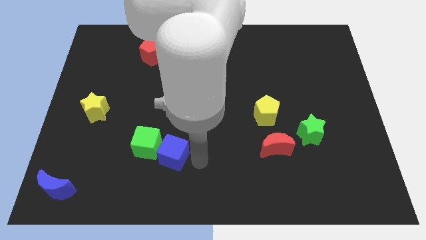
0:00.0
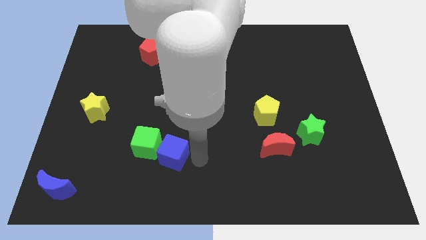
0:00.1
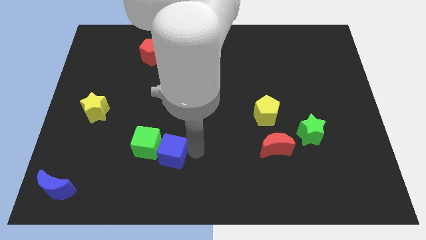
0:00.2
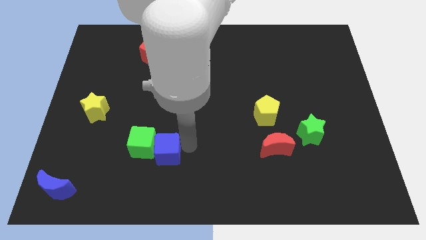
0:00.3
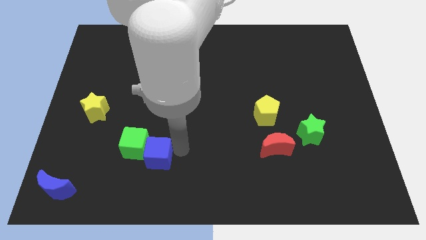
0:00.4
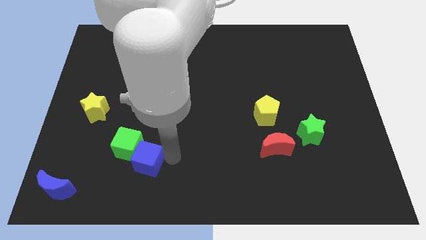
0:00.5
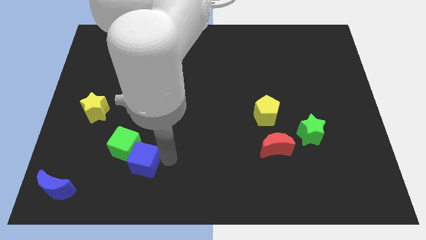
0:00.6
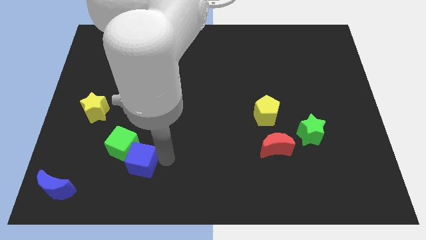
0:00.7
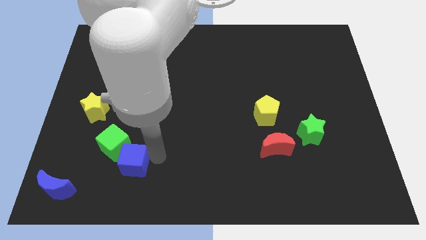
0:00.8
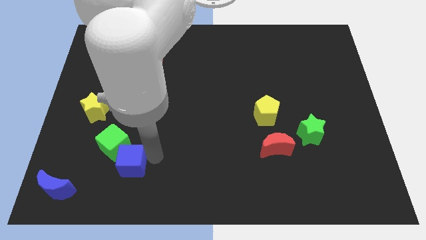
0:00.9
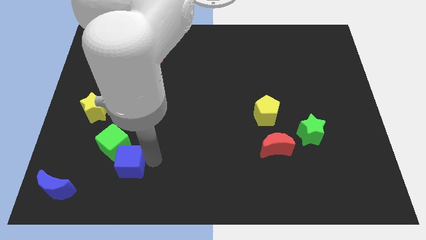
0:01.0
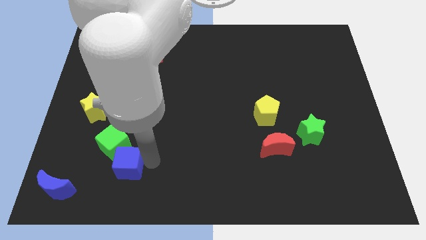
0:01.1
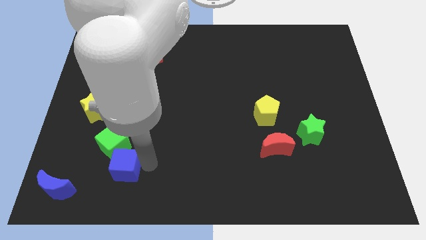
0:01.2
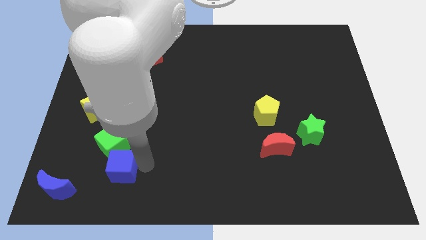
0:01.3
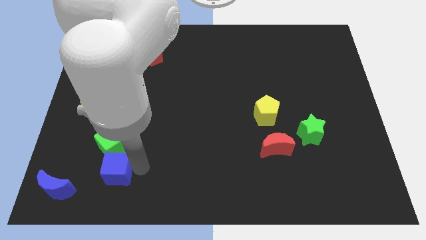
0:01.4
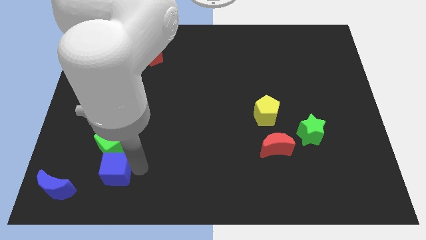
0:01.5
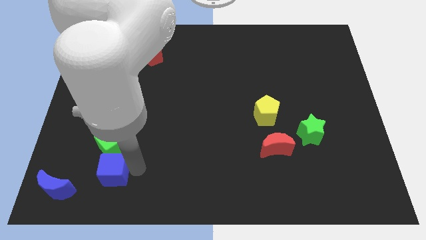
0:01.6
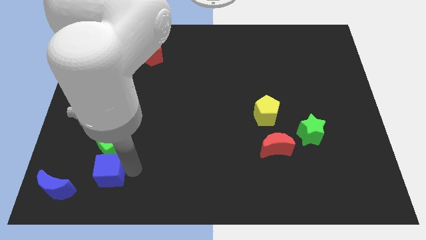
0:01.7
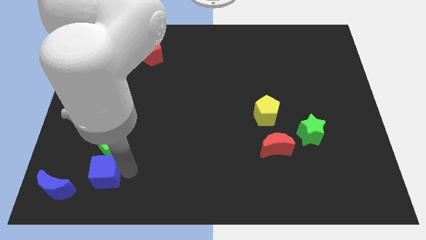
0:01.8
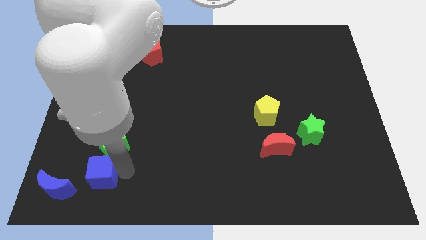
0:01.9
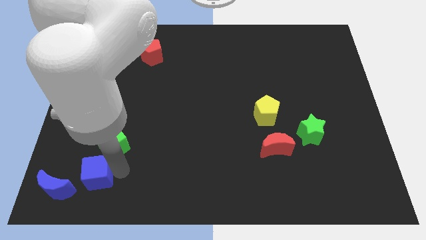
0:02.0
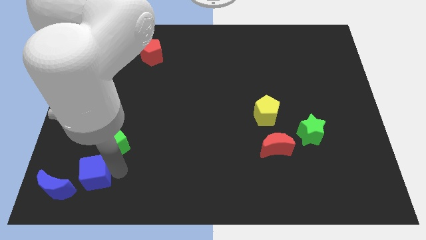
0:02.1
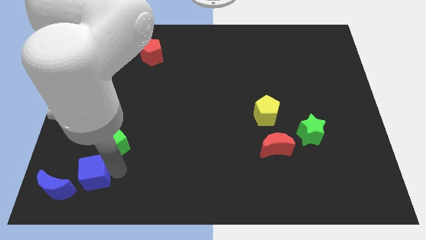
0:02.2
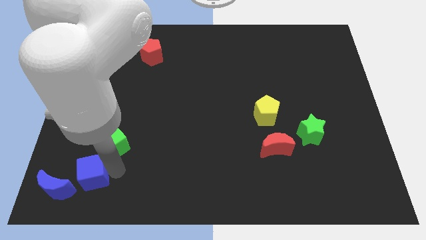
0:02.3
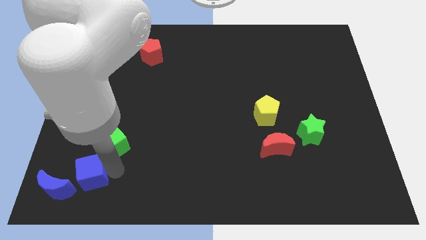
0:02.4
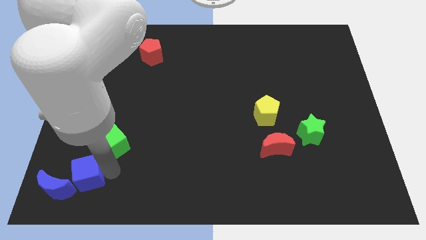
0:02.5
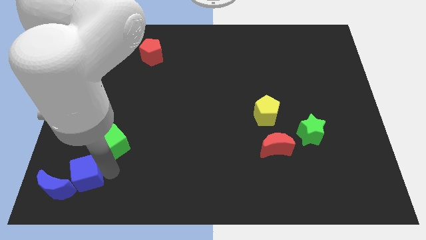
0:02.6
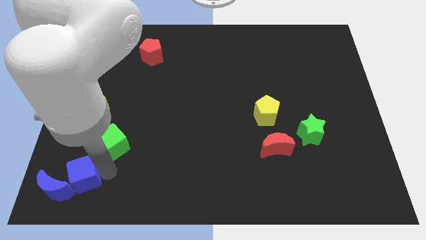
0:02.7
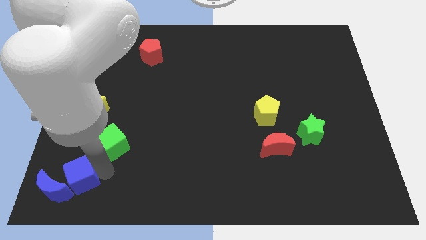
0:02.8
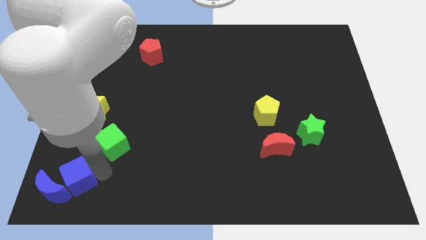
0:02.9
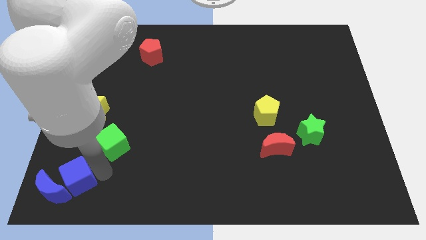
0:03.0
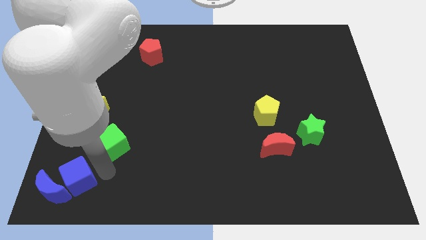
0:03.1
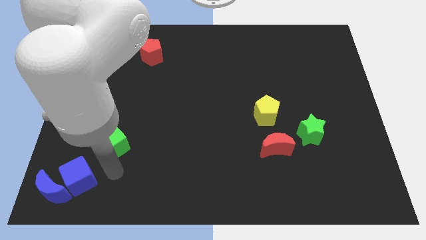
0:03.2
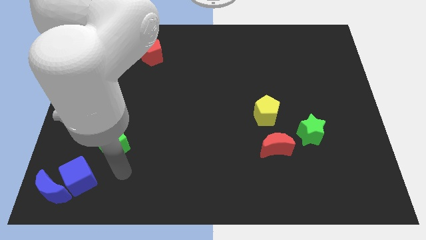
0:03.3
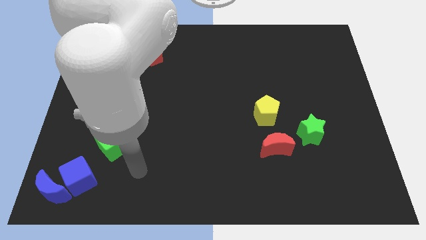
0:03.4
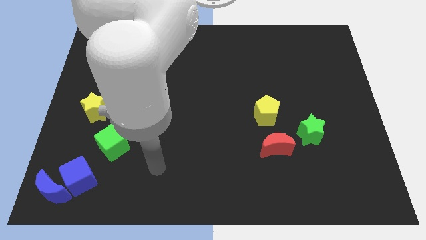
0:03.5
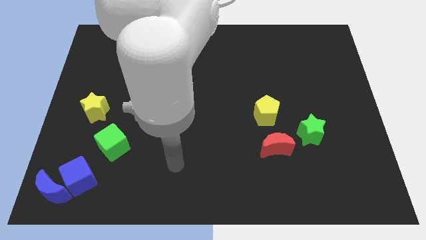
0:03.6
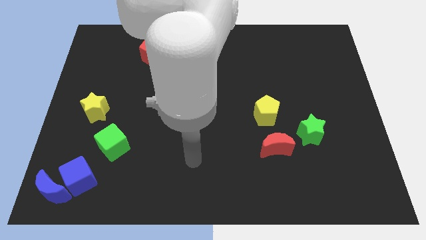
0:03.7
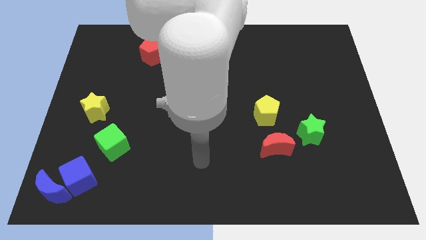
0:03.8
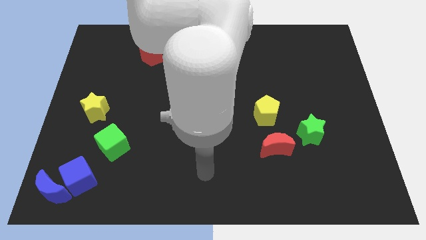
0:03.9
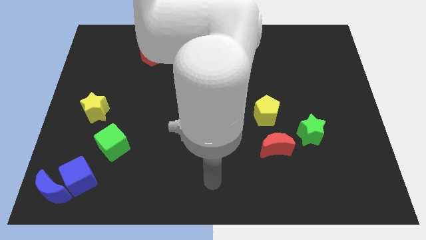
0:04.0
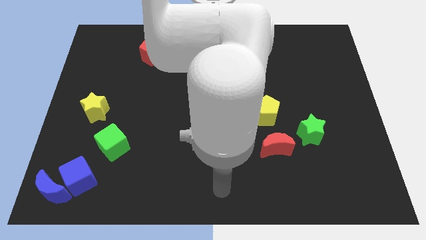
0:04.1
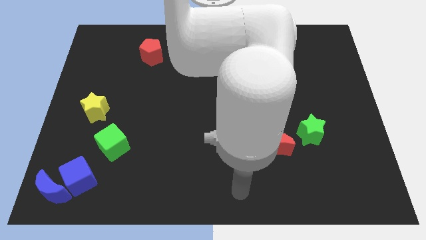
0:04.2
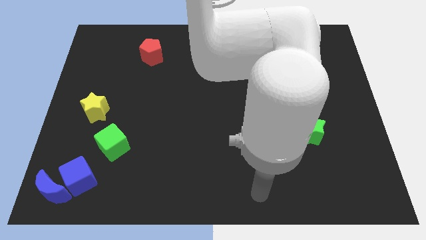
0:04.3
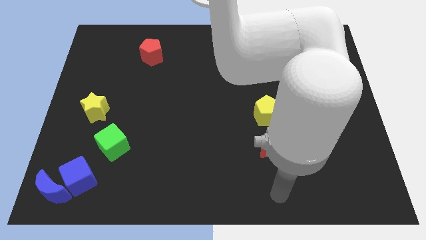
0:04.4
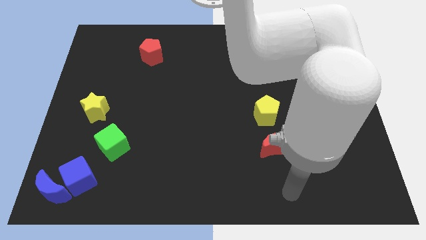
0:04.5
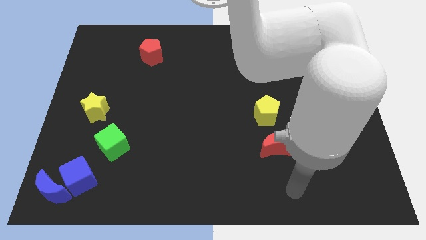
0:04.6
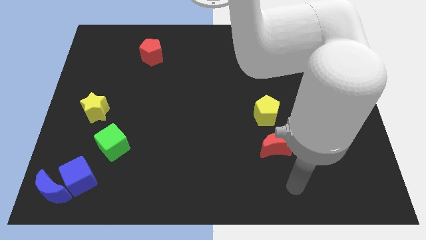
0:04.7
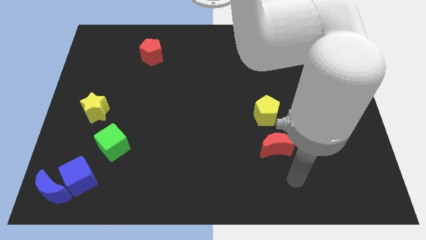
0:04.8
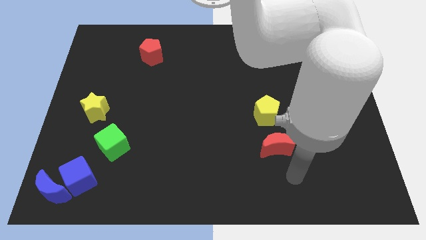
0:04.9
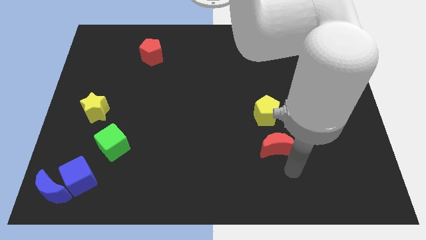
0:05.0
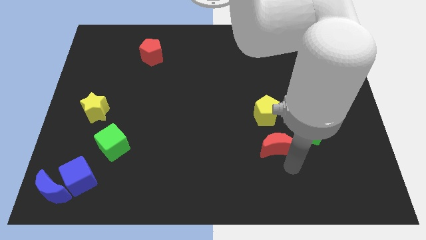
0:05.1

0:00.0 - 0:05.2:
slide the blue cube into the blue moon

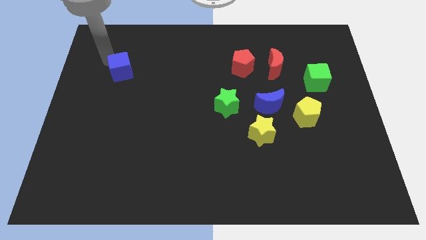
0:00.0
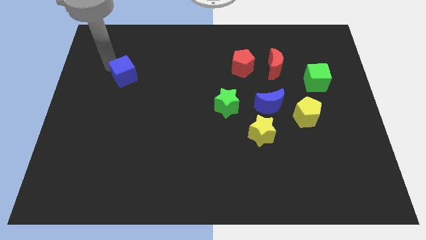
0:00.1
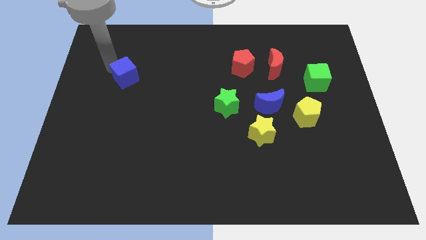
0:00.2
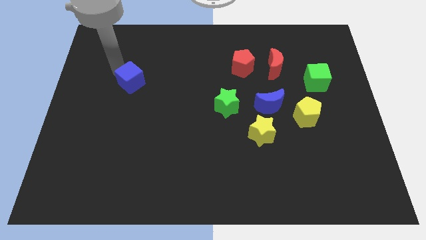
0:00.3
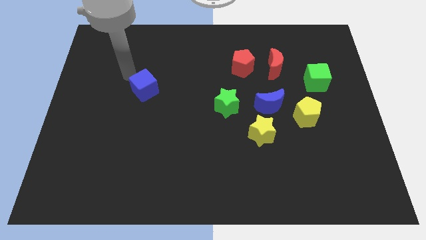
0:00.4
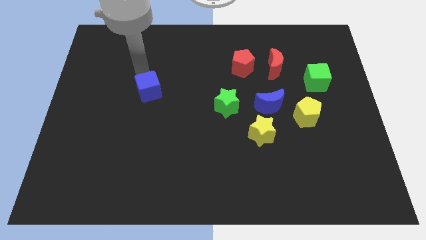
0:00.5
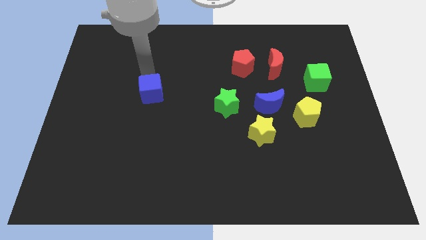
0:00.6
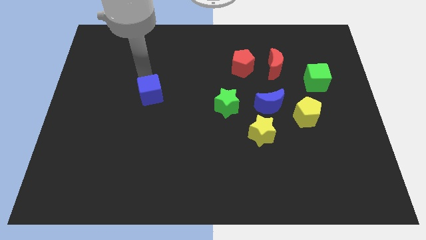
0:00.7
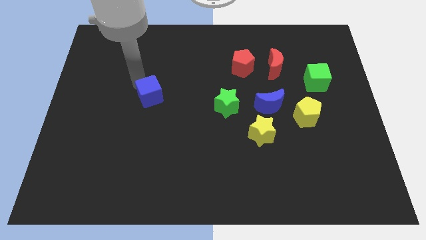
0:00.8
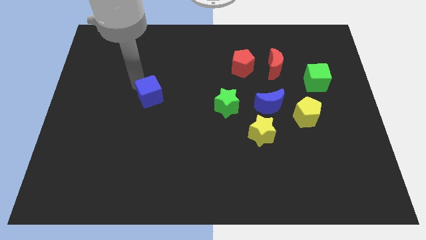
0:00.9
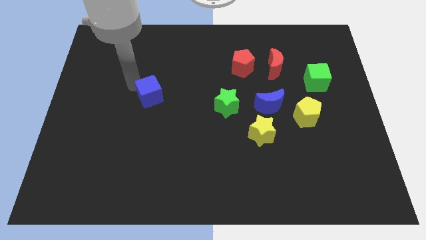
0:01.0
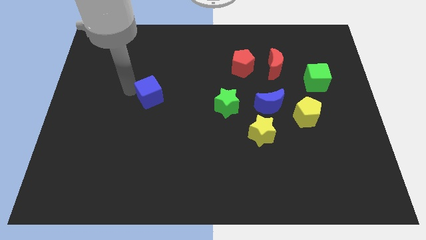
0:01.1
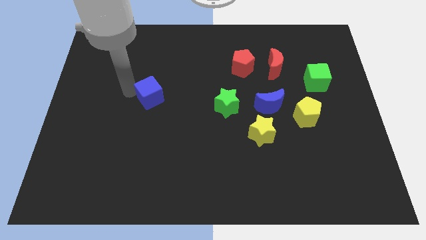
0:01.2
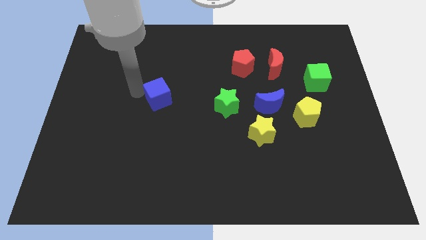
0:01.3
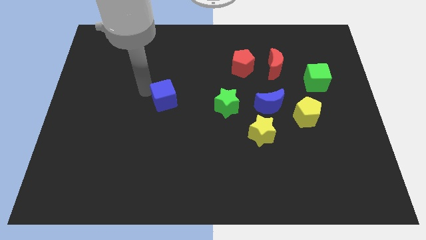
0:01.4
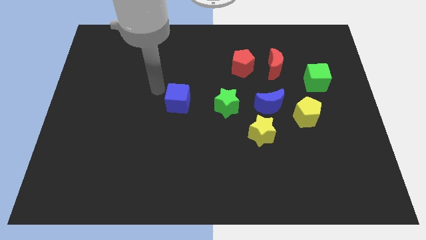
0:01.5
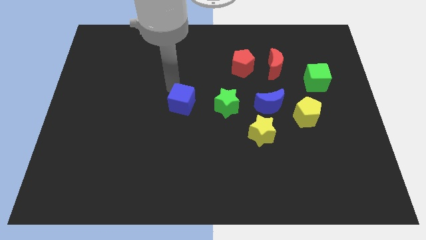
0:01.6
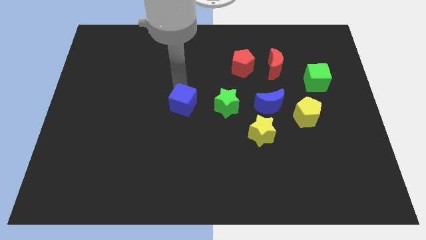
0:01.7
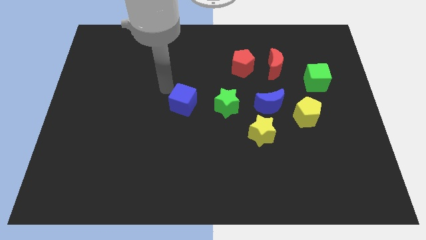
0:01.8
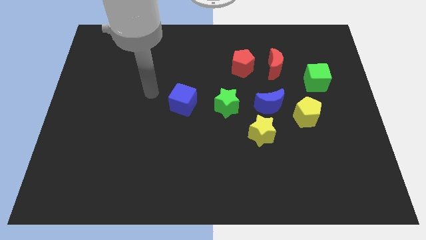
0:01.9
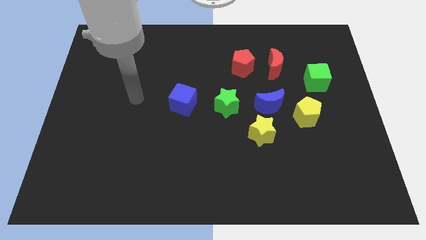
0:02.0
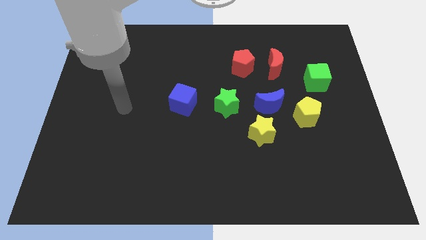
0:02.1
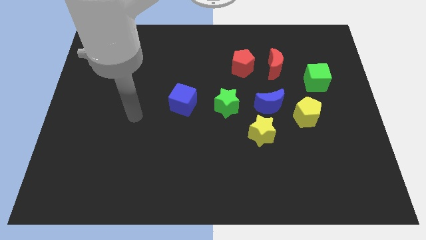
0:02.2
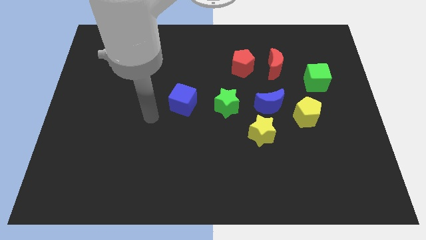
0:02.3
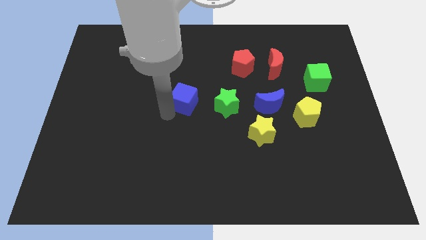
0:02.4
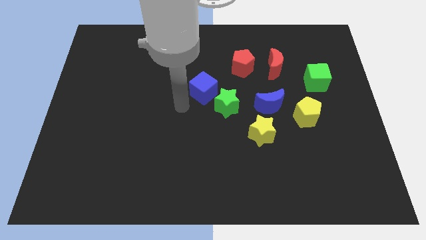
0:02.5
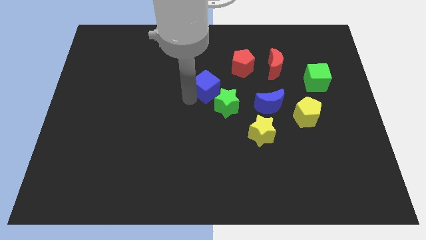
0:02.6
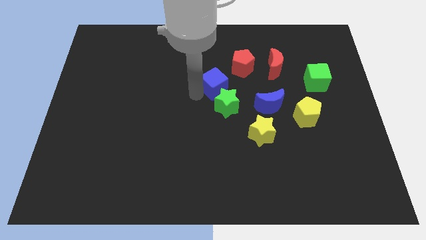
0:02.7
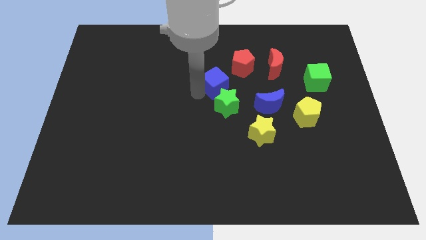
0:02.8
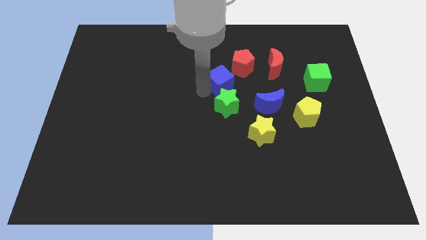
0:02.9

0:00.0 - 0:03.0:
push blue cube above green star

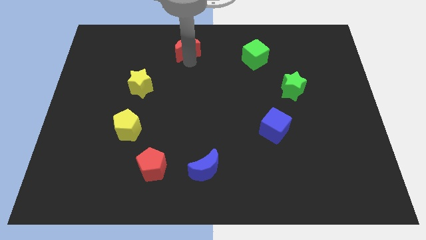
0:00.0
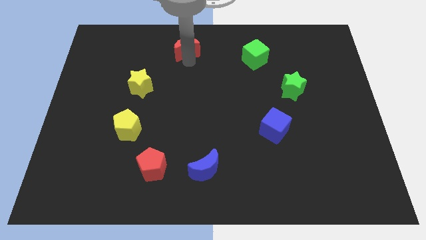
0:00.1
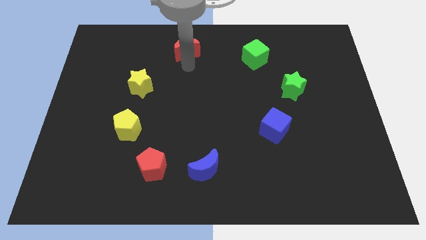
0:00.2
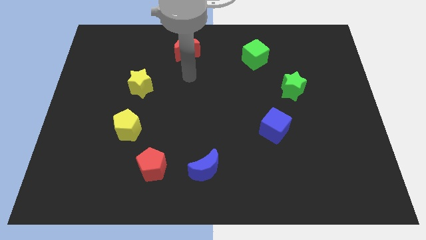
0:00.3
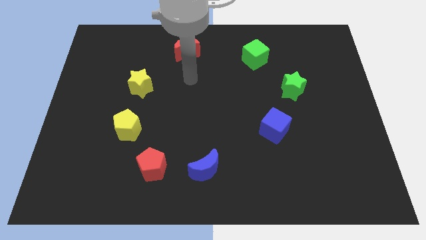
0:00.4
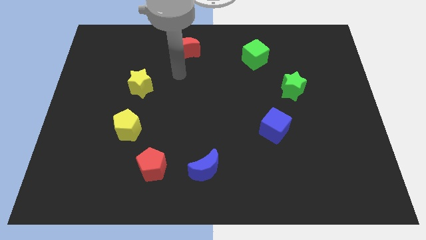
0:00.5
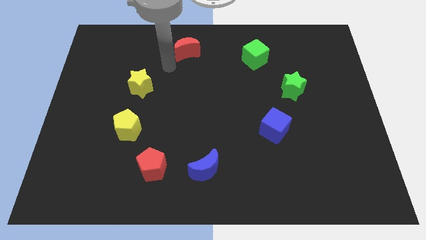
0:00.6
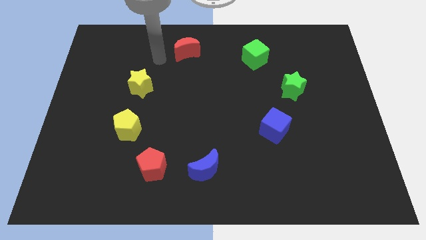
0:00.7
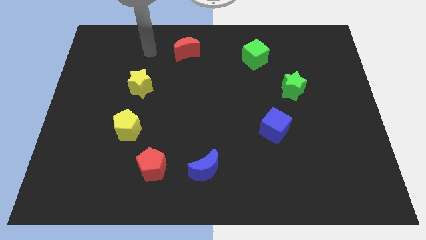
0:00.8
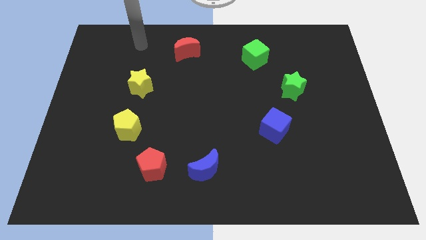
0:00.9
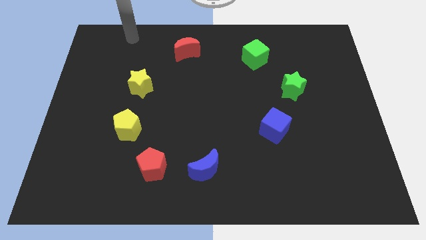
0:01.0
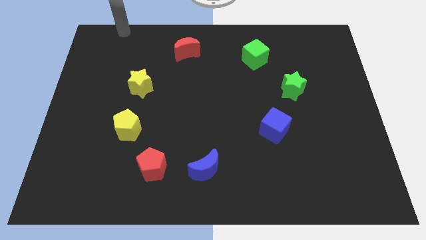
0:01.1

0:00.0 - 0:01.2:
move your hand to the top center left of the board
